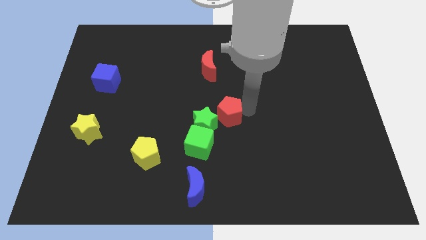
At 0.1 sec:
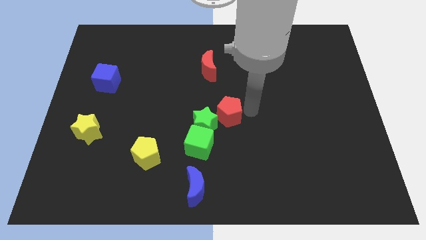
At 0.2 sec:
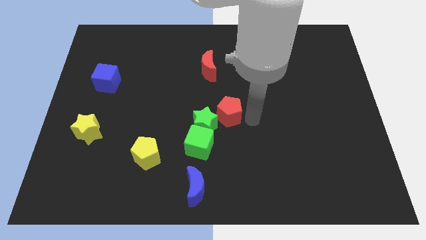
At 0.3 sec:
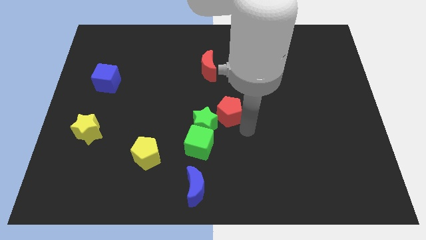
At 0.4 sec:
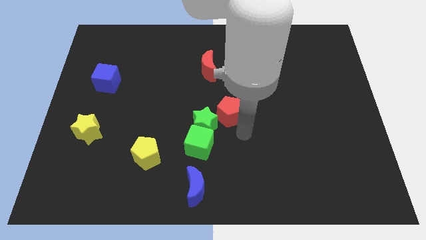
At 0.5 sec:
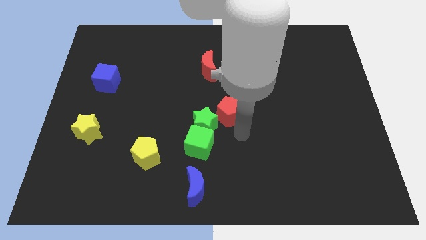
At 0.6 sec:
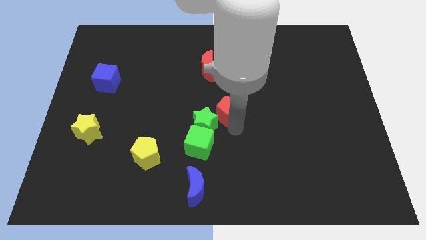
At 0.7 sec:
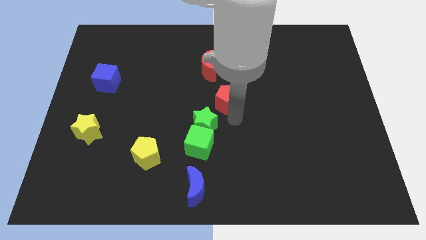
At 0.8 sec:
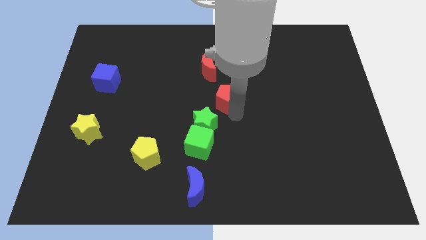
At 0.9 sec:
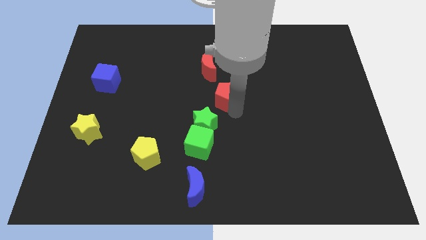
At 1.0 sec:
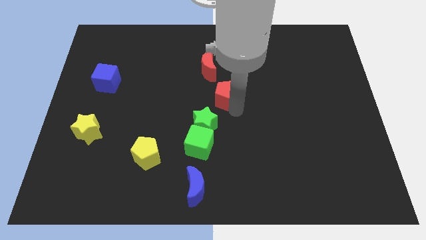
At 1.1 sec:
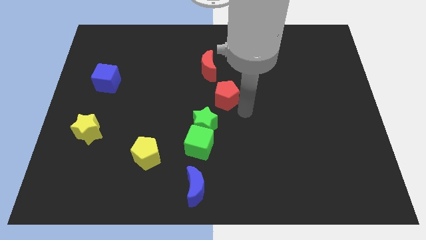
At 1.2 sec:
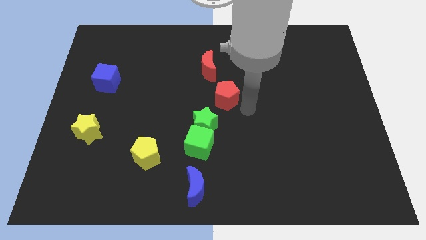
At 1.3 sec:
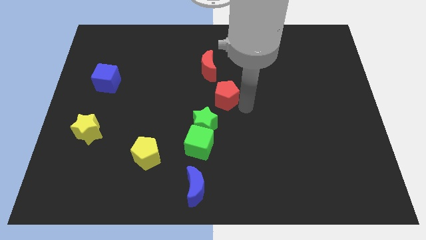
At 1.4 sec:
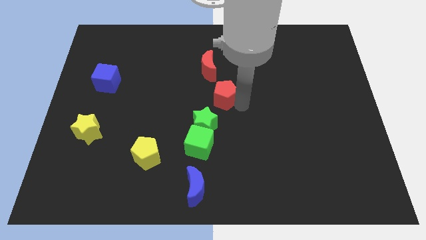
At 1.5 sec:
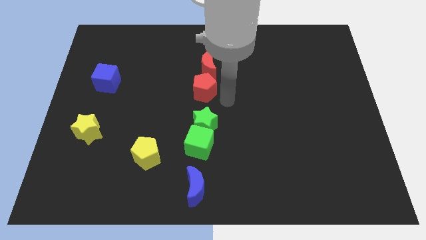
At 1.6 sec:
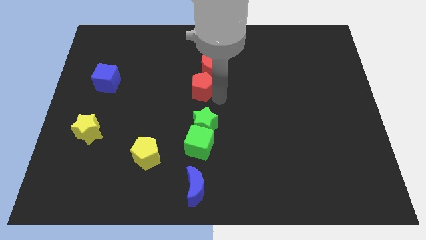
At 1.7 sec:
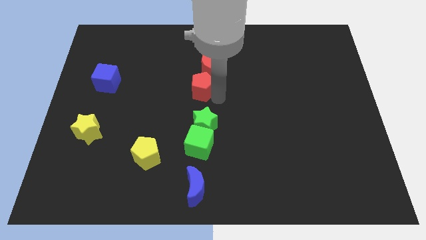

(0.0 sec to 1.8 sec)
push red pentagon to the bottom of the red moon

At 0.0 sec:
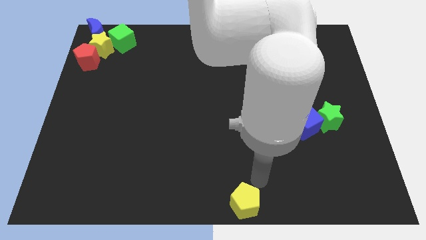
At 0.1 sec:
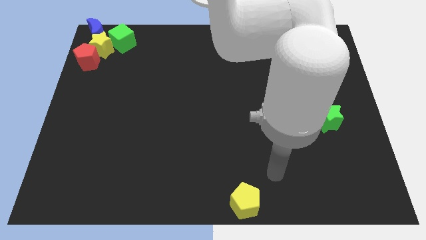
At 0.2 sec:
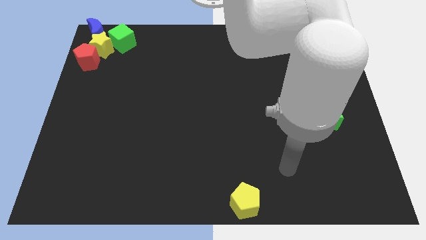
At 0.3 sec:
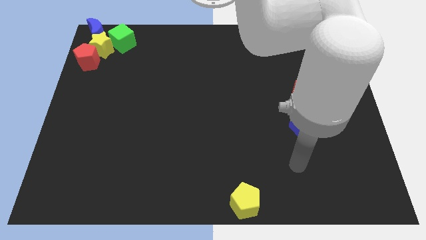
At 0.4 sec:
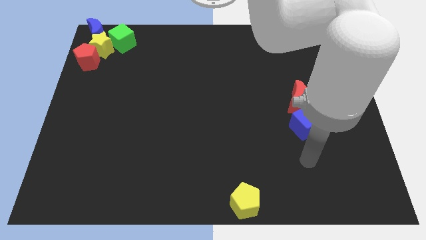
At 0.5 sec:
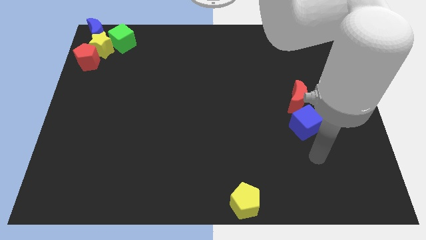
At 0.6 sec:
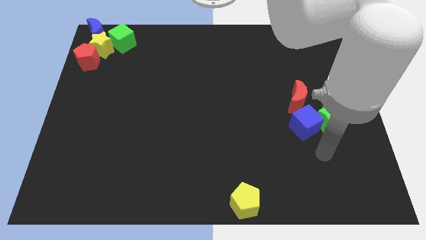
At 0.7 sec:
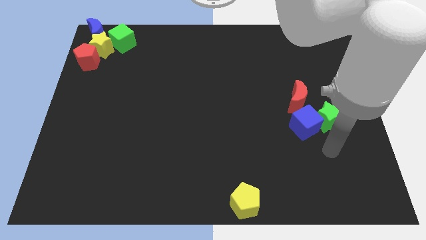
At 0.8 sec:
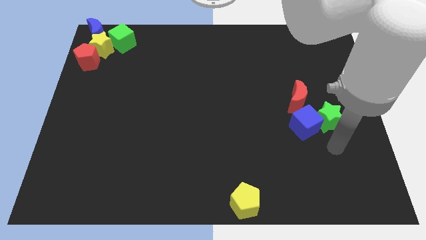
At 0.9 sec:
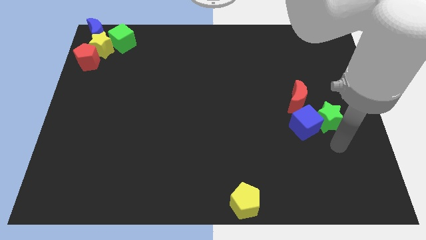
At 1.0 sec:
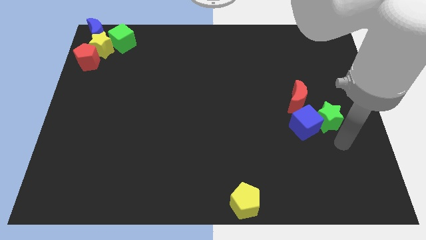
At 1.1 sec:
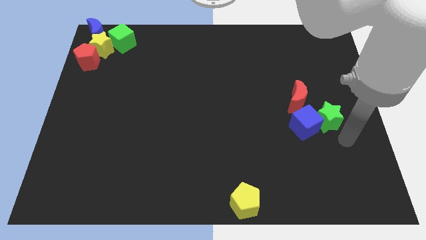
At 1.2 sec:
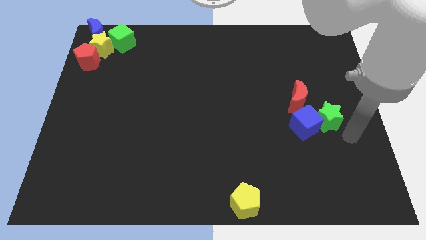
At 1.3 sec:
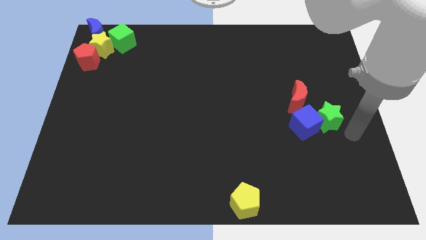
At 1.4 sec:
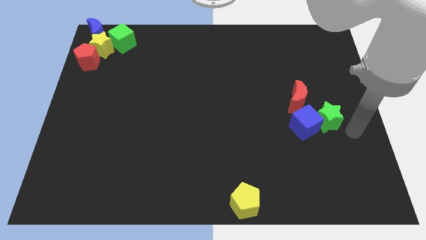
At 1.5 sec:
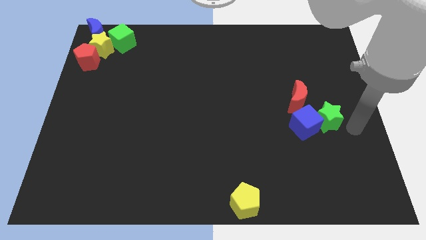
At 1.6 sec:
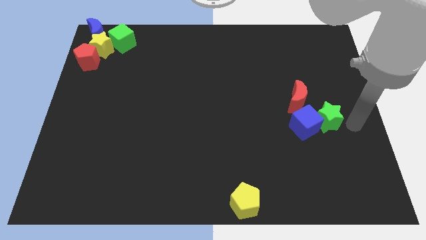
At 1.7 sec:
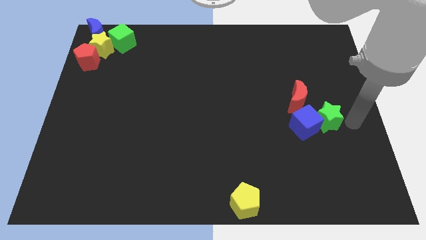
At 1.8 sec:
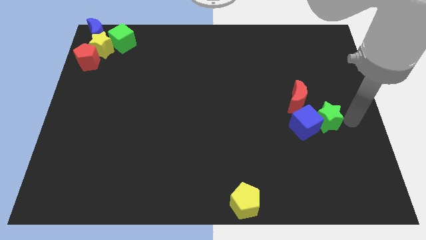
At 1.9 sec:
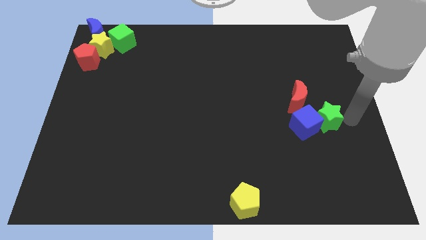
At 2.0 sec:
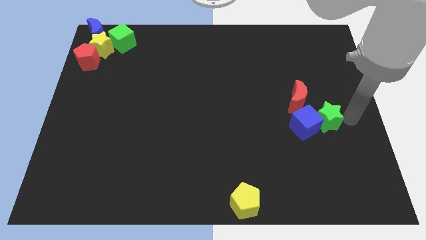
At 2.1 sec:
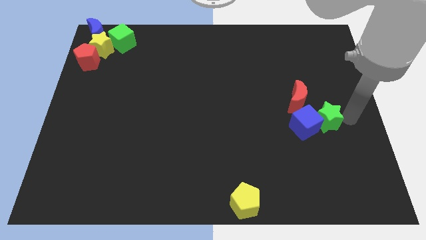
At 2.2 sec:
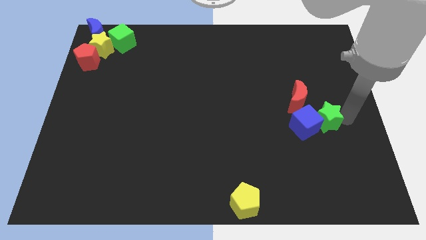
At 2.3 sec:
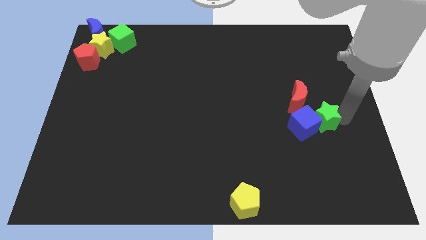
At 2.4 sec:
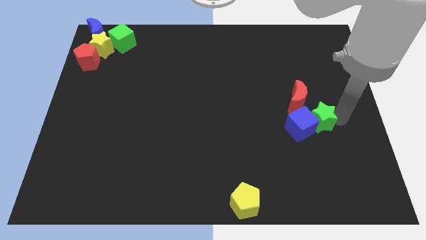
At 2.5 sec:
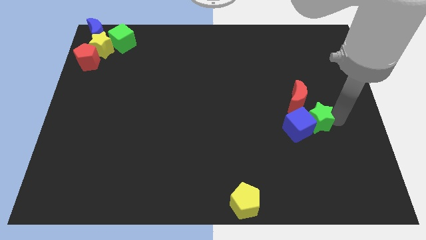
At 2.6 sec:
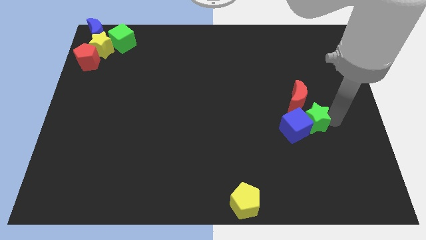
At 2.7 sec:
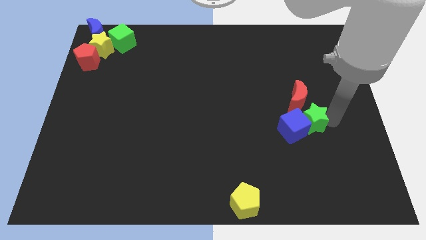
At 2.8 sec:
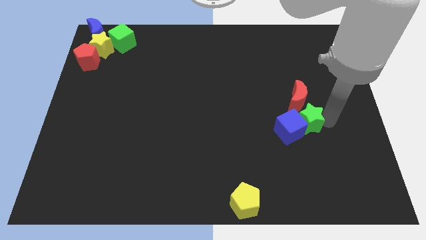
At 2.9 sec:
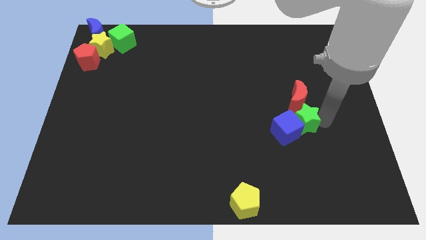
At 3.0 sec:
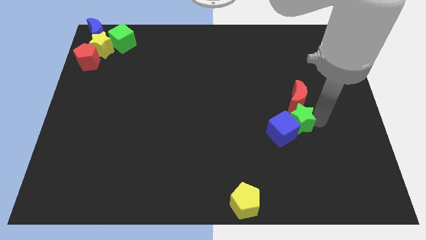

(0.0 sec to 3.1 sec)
slightly push the green star along with blue cube towards bottom left of the board

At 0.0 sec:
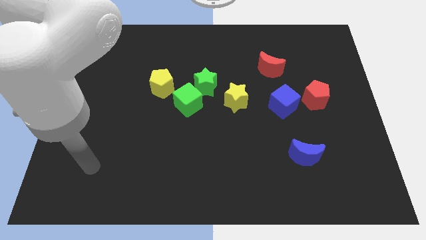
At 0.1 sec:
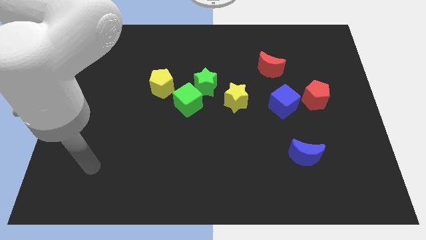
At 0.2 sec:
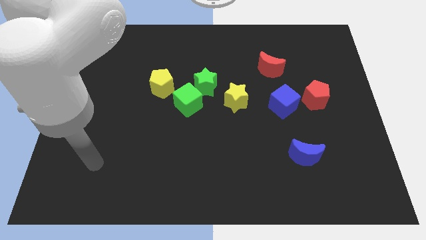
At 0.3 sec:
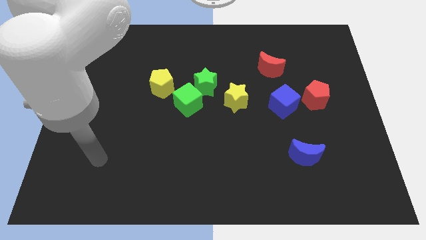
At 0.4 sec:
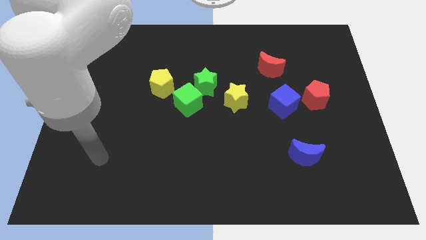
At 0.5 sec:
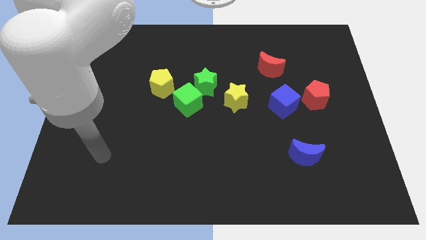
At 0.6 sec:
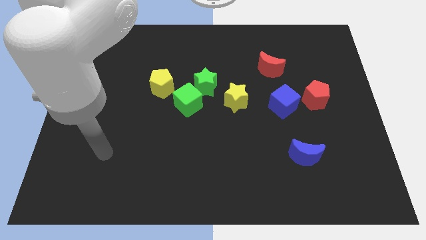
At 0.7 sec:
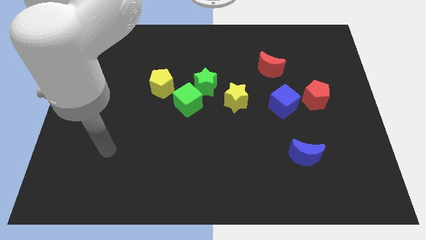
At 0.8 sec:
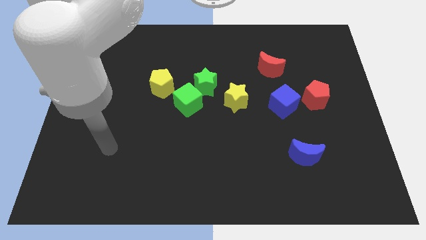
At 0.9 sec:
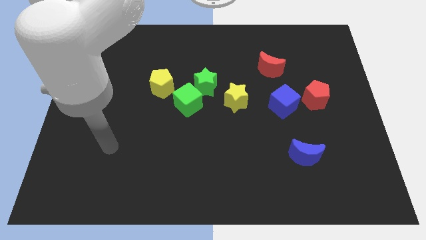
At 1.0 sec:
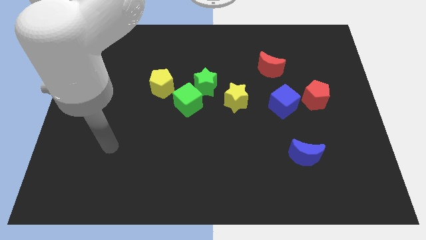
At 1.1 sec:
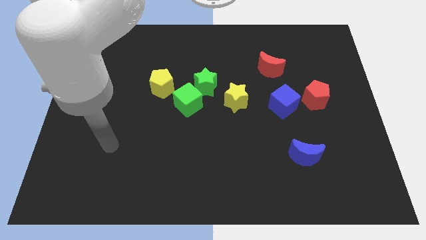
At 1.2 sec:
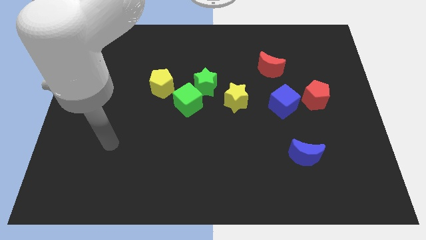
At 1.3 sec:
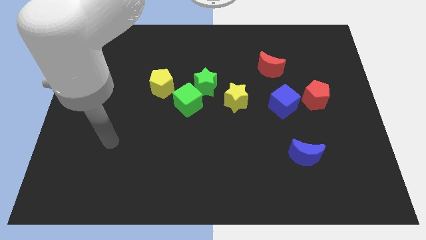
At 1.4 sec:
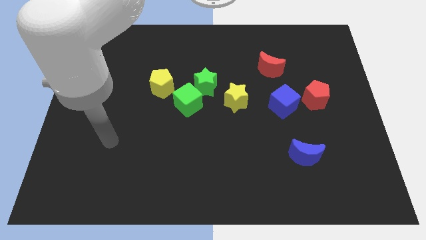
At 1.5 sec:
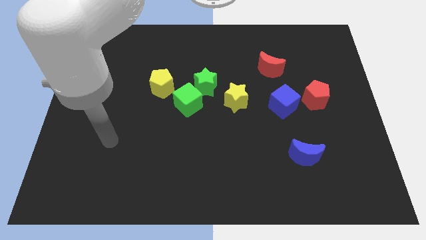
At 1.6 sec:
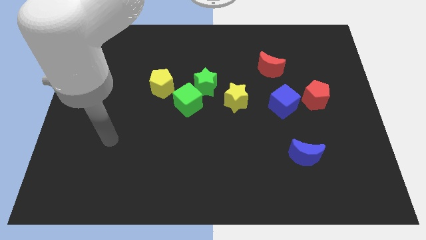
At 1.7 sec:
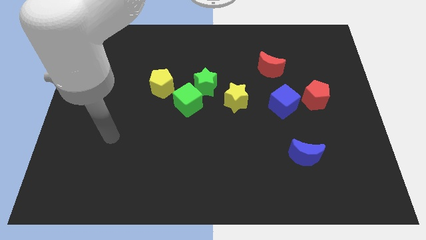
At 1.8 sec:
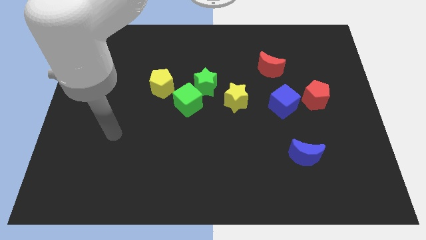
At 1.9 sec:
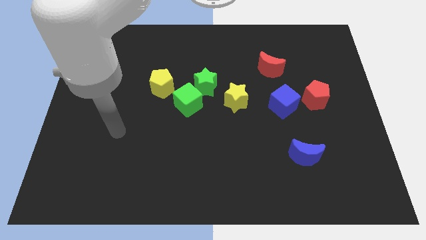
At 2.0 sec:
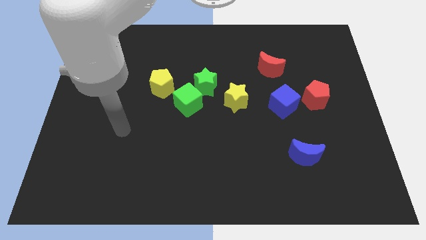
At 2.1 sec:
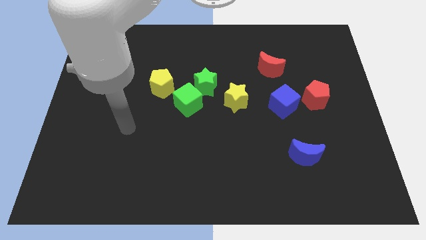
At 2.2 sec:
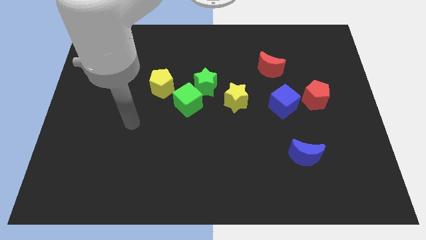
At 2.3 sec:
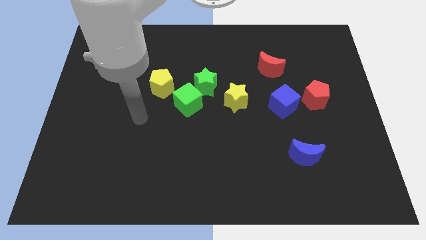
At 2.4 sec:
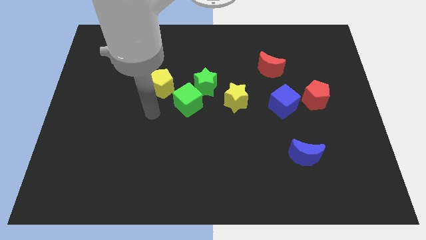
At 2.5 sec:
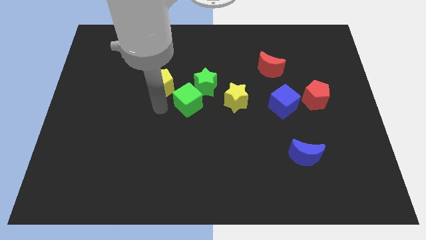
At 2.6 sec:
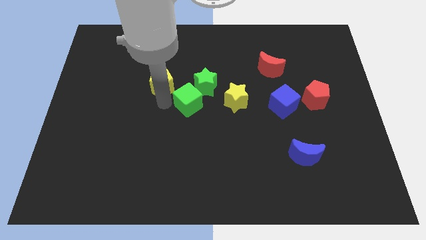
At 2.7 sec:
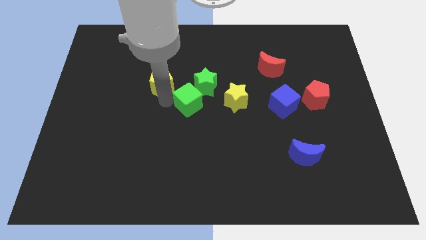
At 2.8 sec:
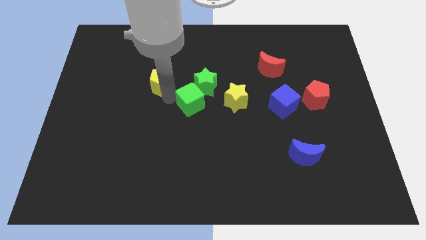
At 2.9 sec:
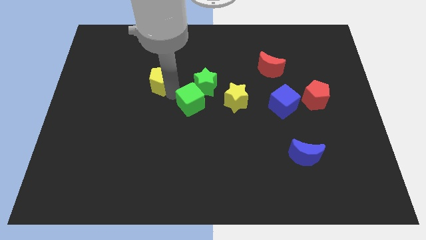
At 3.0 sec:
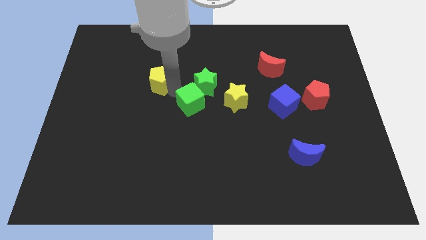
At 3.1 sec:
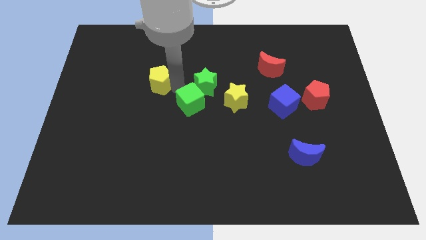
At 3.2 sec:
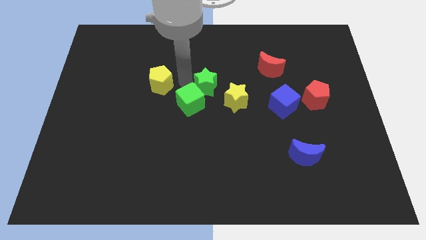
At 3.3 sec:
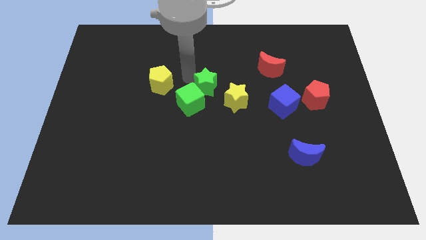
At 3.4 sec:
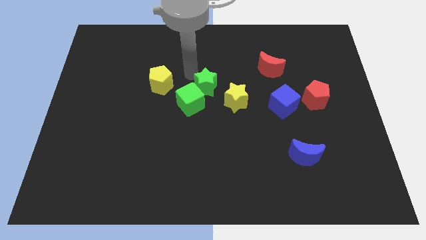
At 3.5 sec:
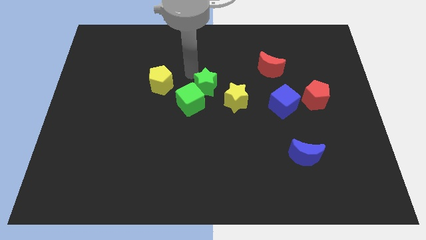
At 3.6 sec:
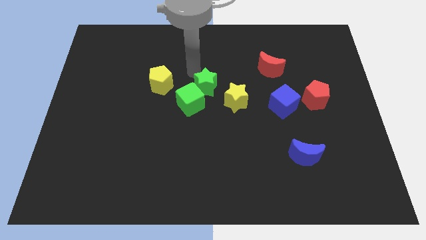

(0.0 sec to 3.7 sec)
move your arm close to the green star

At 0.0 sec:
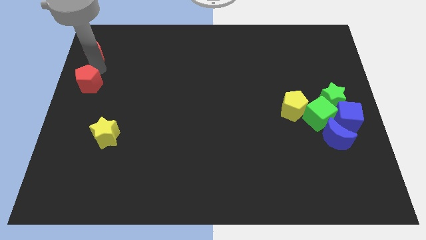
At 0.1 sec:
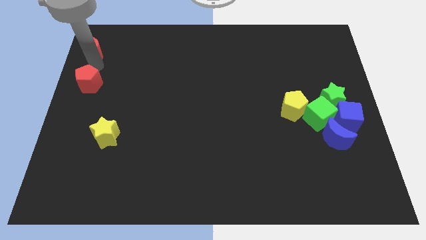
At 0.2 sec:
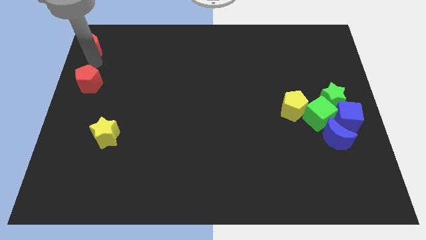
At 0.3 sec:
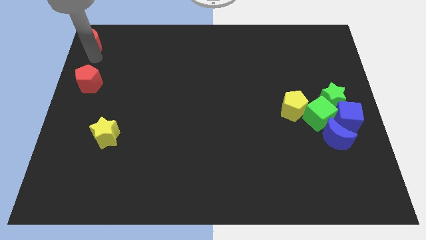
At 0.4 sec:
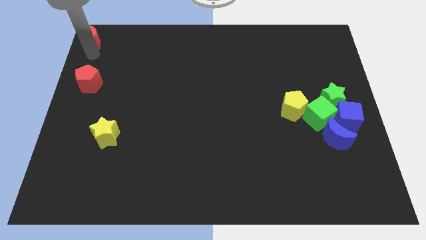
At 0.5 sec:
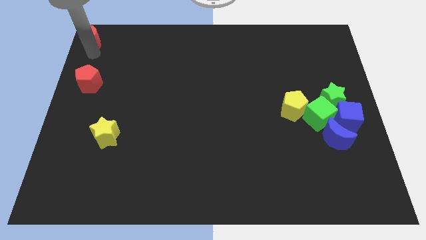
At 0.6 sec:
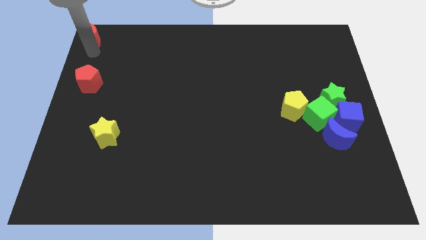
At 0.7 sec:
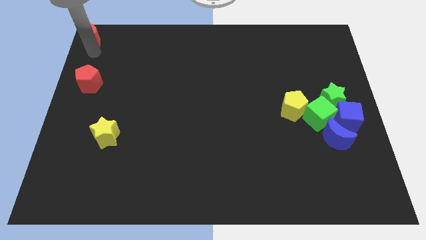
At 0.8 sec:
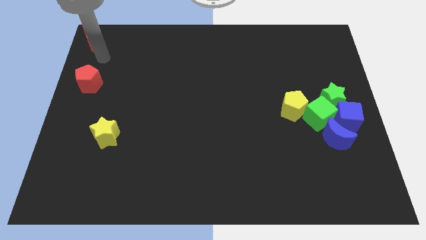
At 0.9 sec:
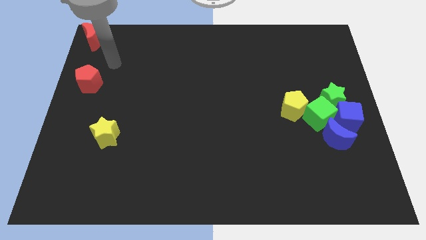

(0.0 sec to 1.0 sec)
separate the red moon from the red pentagon
